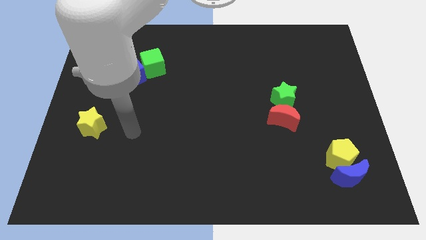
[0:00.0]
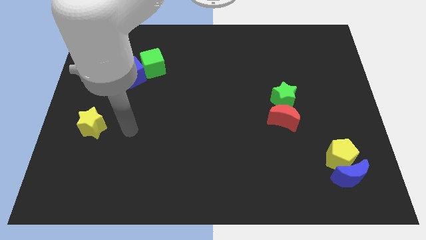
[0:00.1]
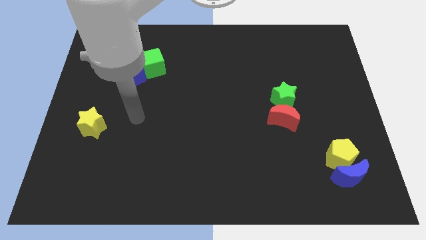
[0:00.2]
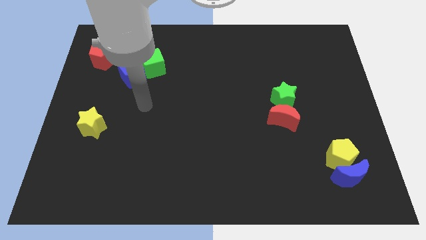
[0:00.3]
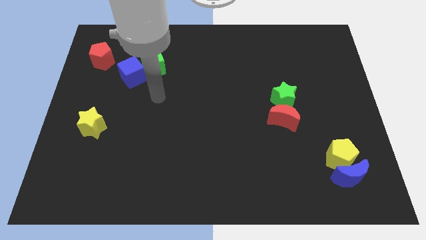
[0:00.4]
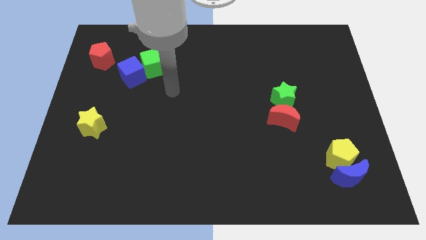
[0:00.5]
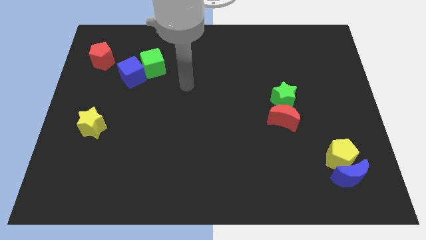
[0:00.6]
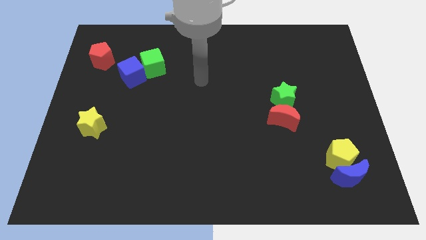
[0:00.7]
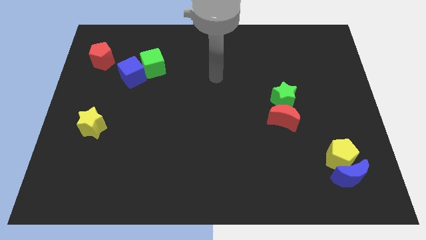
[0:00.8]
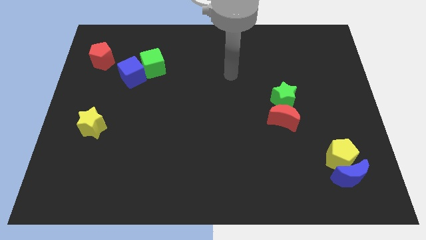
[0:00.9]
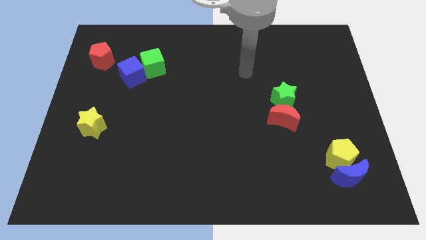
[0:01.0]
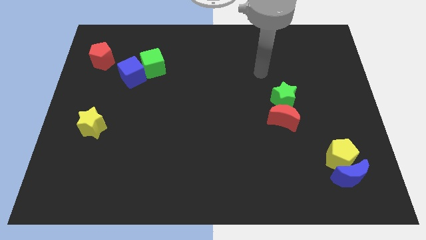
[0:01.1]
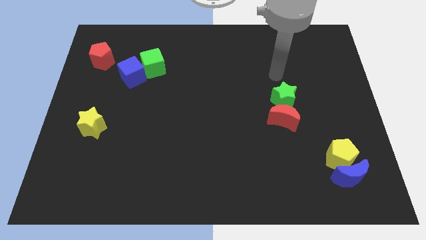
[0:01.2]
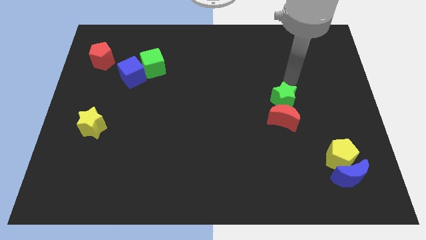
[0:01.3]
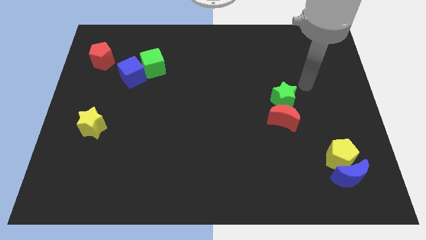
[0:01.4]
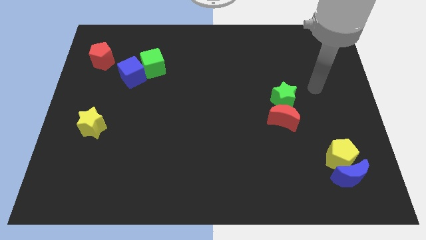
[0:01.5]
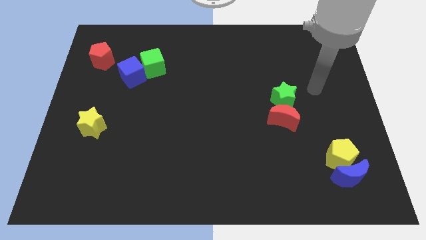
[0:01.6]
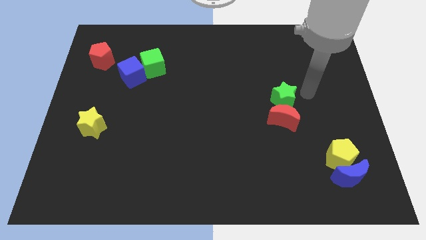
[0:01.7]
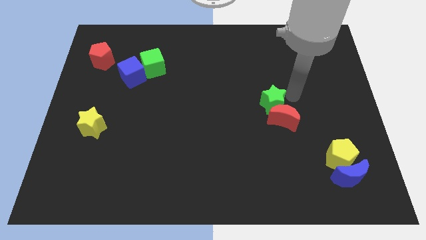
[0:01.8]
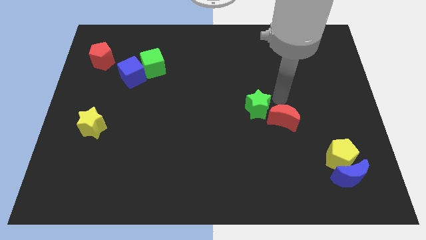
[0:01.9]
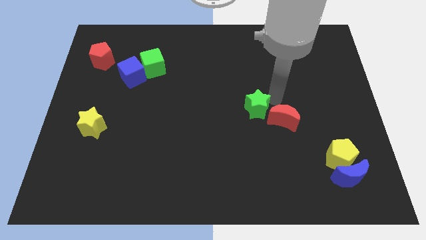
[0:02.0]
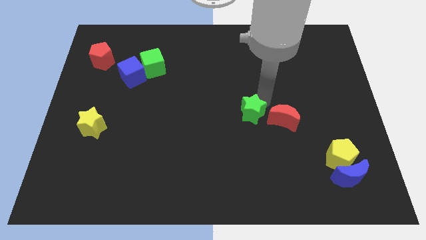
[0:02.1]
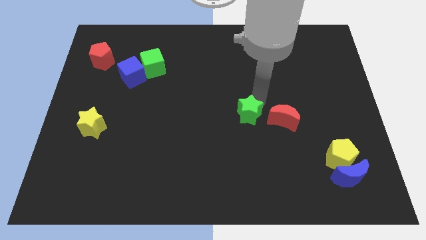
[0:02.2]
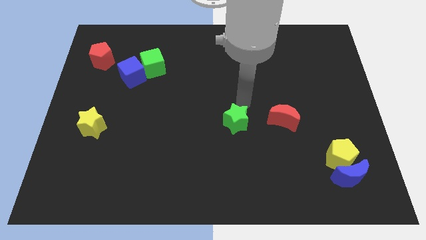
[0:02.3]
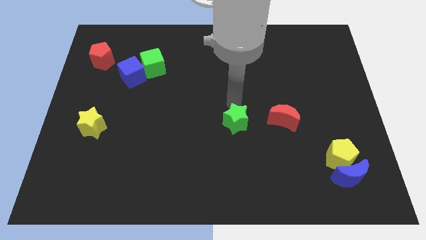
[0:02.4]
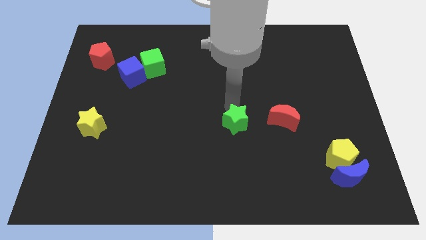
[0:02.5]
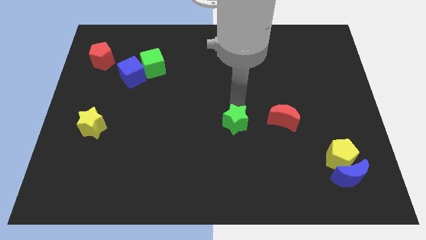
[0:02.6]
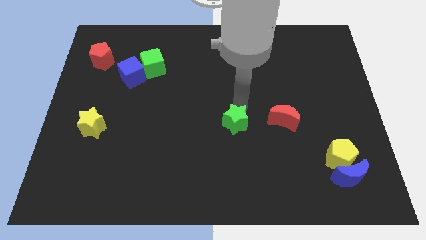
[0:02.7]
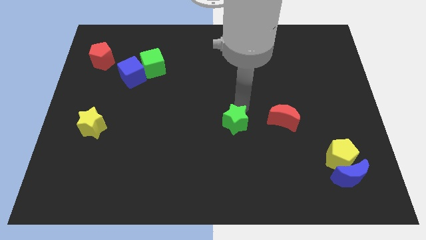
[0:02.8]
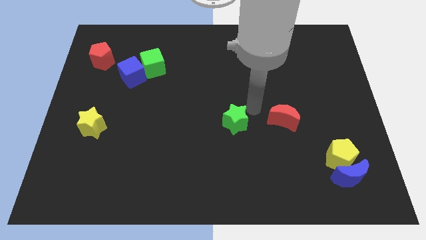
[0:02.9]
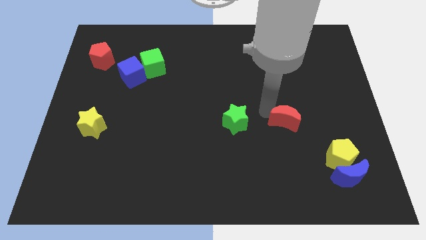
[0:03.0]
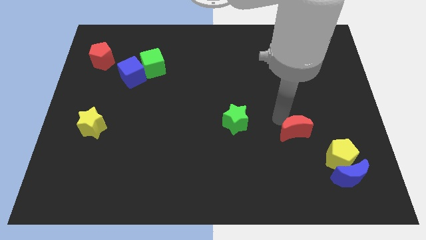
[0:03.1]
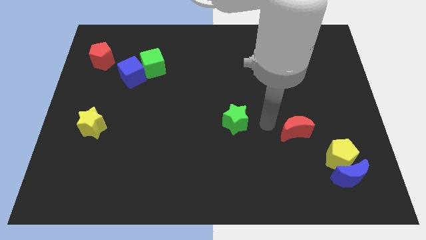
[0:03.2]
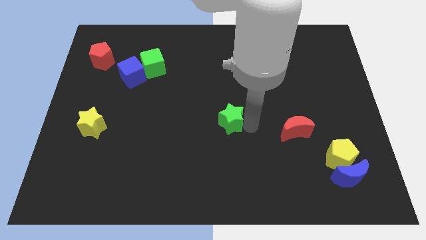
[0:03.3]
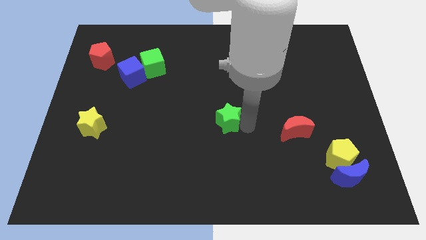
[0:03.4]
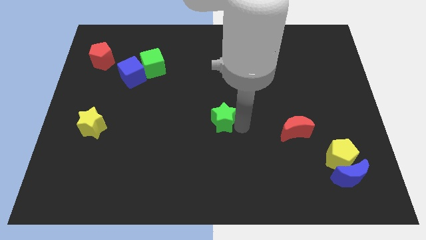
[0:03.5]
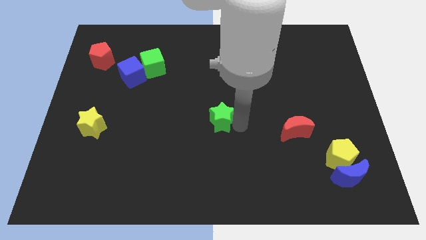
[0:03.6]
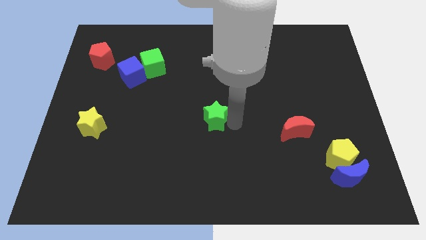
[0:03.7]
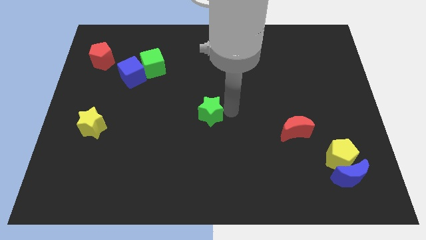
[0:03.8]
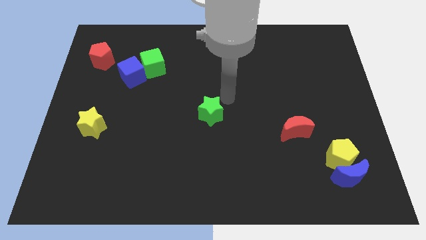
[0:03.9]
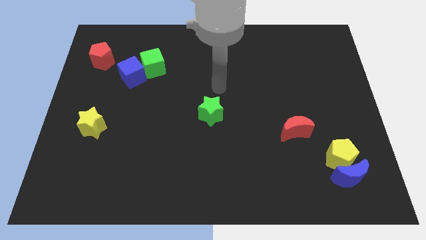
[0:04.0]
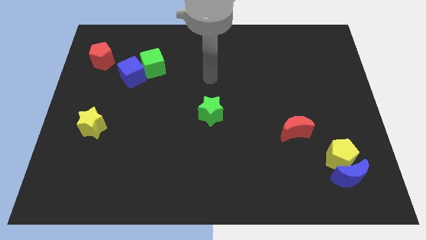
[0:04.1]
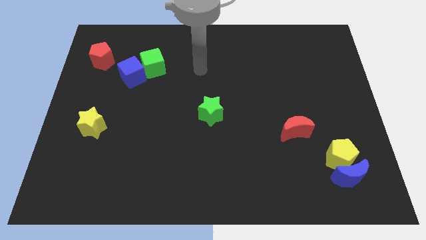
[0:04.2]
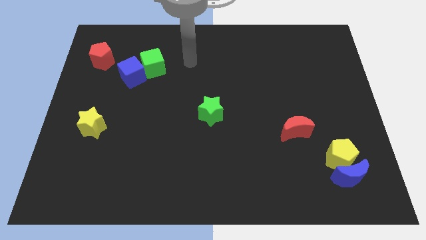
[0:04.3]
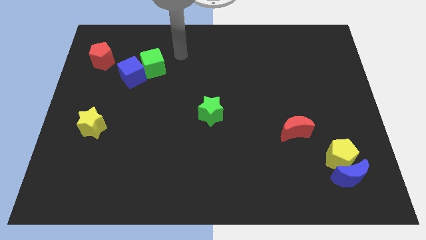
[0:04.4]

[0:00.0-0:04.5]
move the green star towards the center of the board

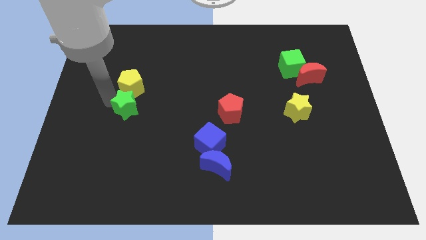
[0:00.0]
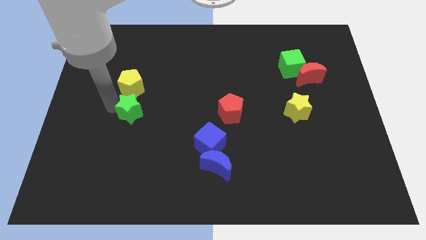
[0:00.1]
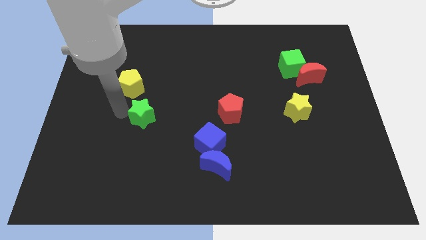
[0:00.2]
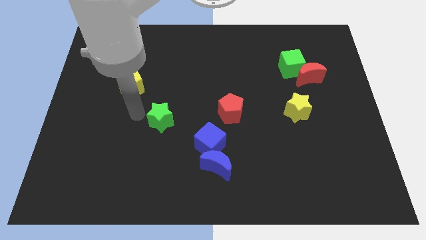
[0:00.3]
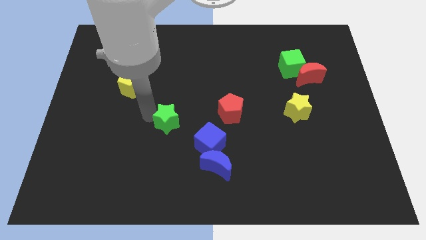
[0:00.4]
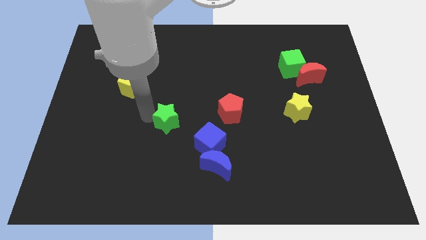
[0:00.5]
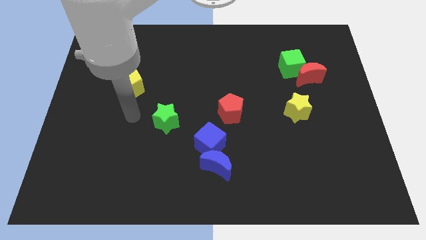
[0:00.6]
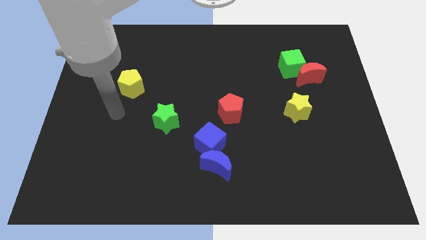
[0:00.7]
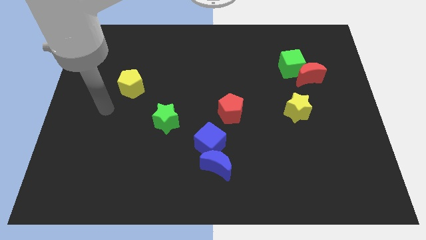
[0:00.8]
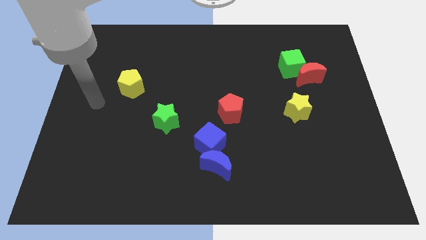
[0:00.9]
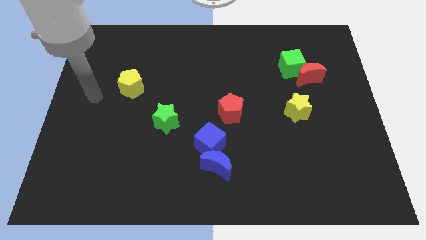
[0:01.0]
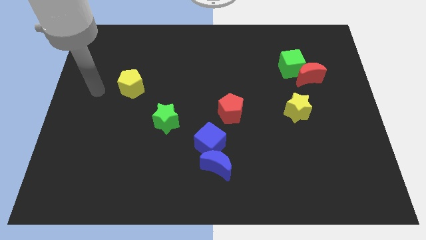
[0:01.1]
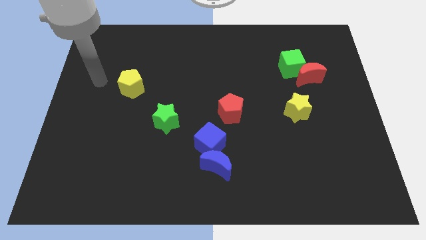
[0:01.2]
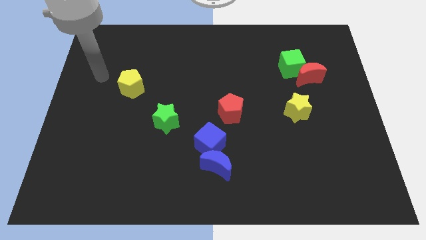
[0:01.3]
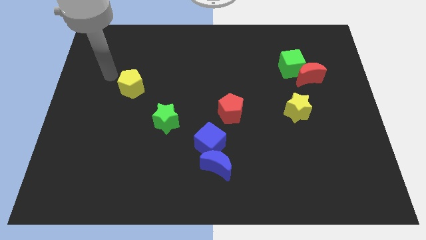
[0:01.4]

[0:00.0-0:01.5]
put the green star between the yellow pentagon and blue cube

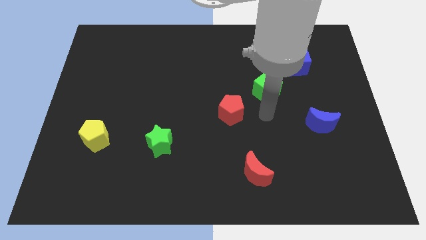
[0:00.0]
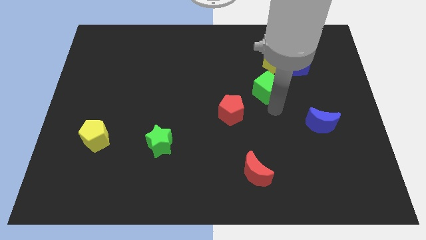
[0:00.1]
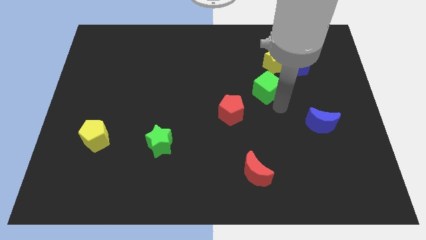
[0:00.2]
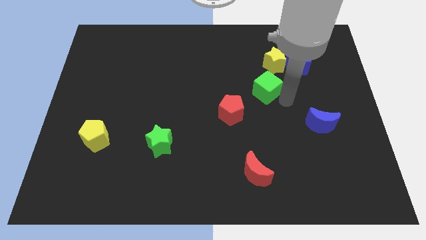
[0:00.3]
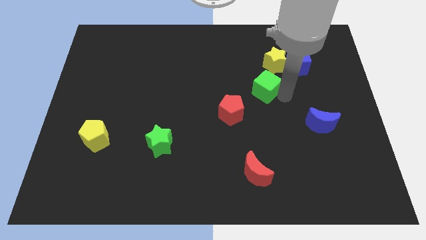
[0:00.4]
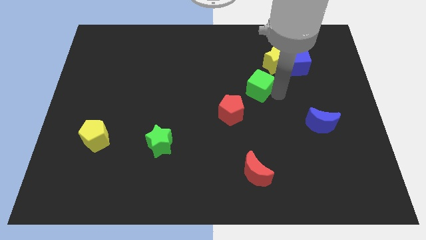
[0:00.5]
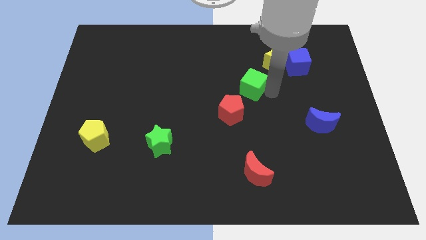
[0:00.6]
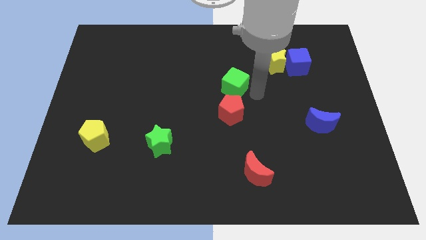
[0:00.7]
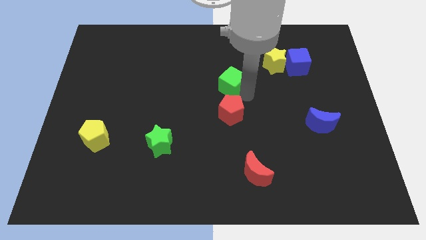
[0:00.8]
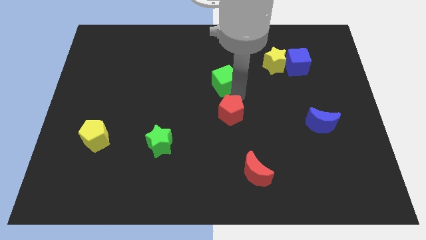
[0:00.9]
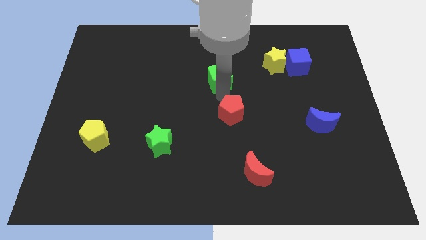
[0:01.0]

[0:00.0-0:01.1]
place the green cube above the red pentagon

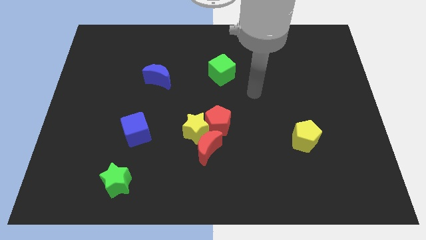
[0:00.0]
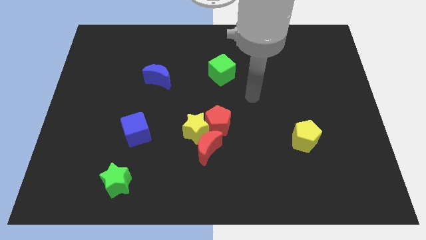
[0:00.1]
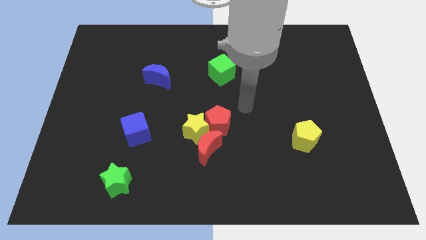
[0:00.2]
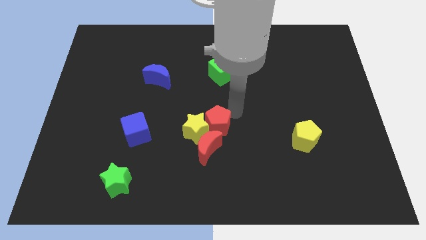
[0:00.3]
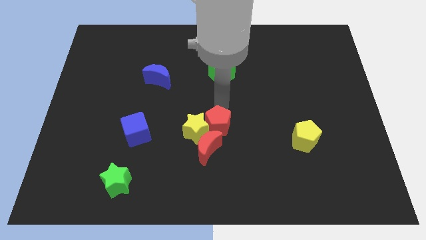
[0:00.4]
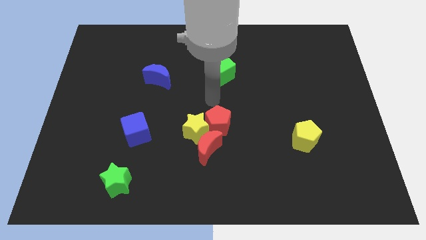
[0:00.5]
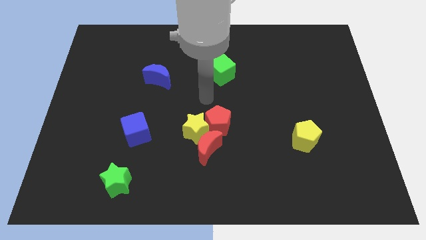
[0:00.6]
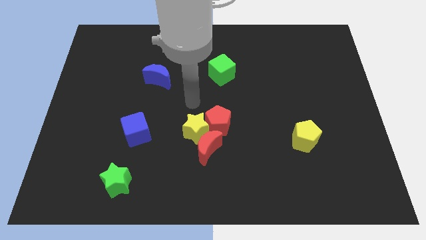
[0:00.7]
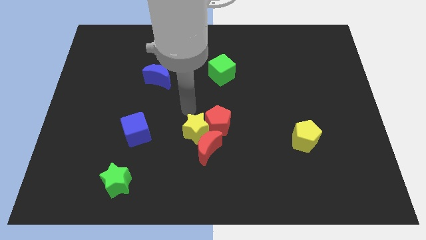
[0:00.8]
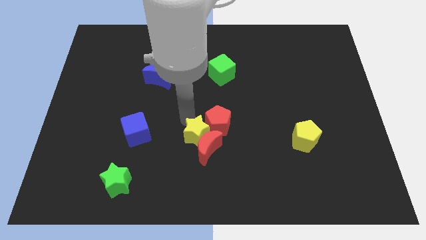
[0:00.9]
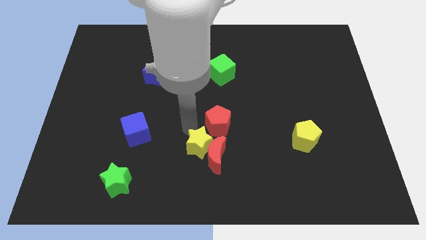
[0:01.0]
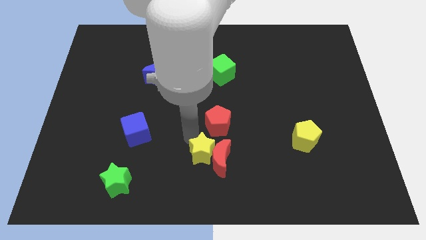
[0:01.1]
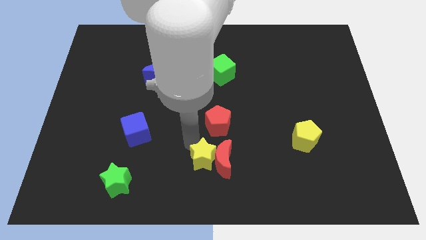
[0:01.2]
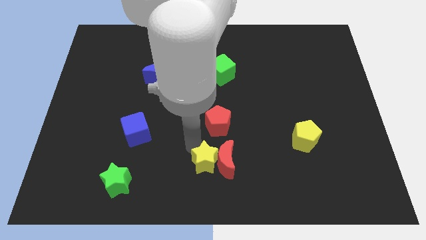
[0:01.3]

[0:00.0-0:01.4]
separate the yellow star from the red pentagon

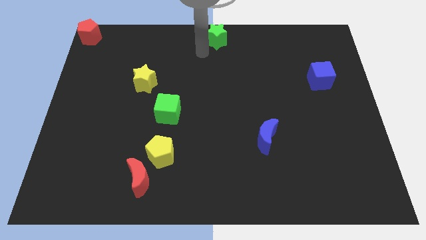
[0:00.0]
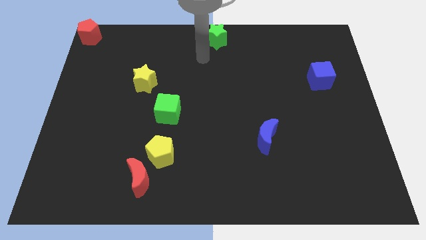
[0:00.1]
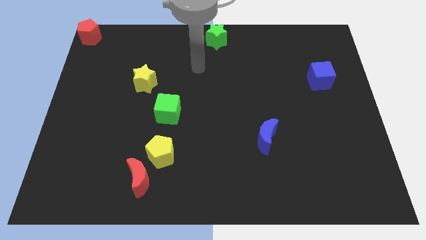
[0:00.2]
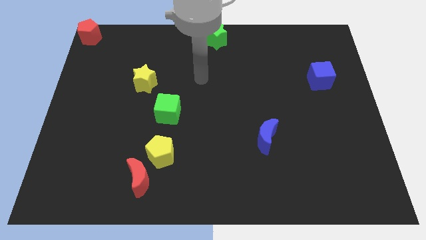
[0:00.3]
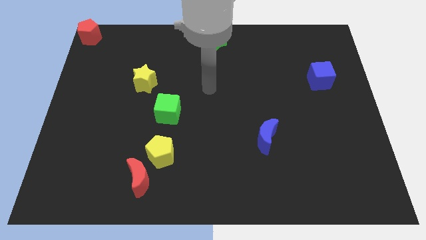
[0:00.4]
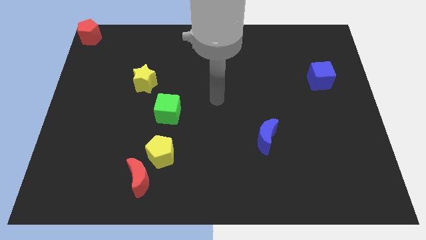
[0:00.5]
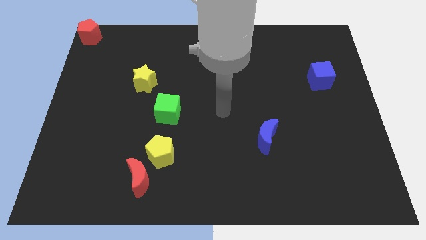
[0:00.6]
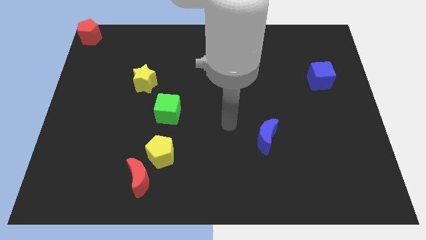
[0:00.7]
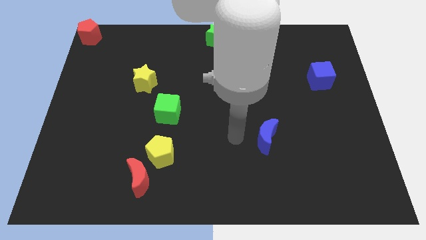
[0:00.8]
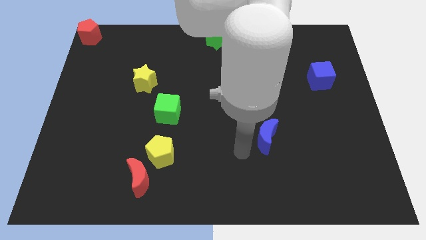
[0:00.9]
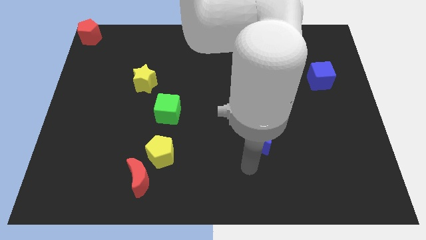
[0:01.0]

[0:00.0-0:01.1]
move the arm away from the green star
